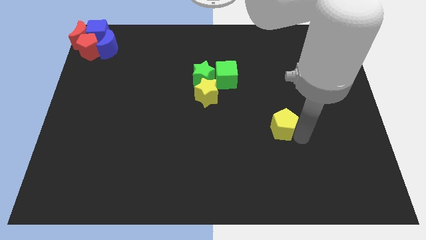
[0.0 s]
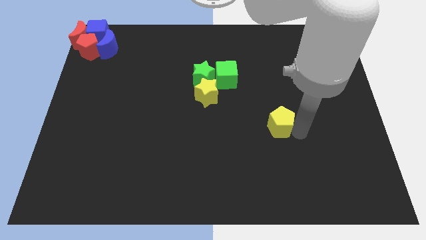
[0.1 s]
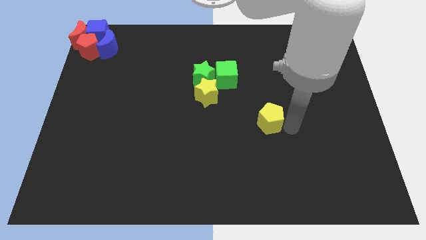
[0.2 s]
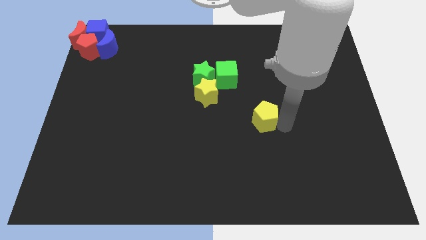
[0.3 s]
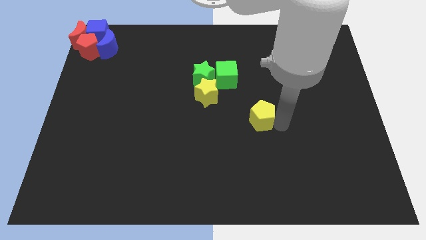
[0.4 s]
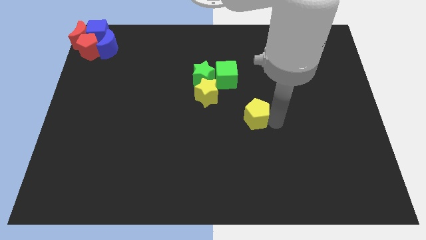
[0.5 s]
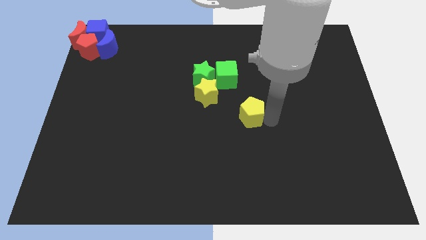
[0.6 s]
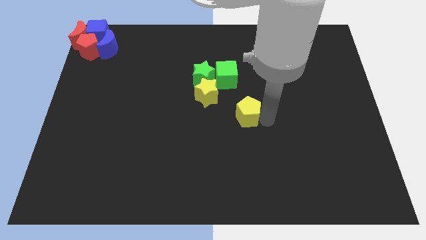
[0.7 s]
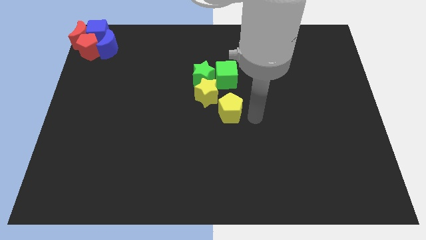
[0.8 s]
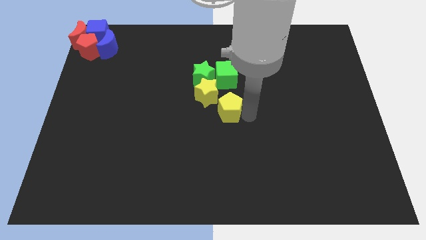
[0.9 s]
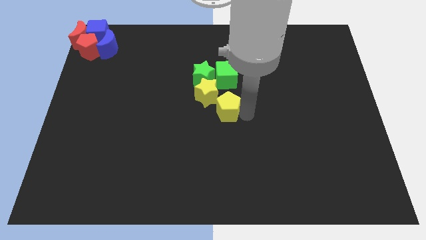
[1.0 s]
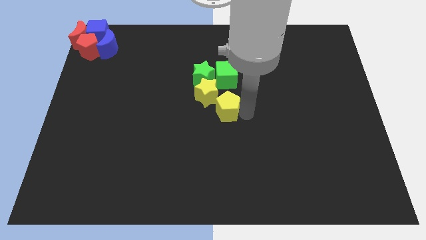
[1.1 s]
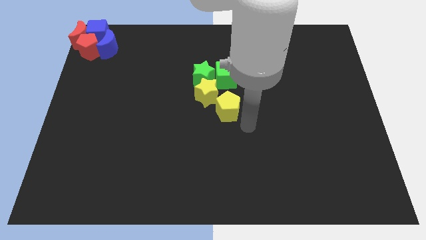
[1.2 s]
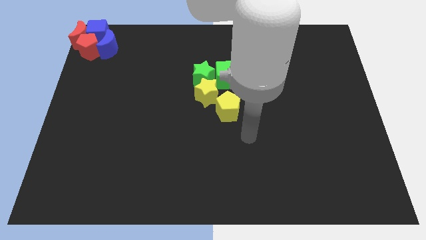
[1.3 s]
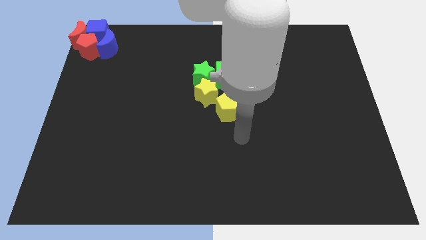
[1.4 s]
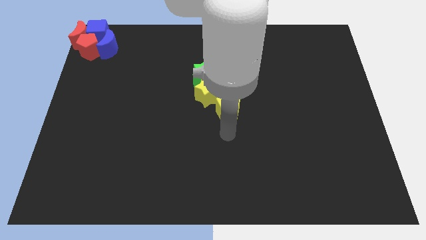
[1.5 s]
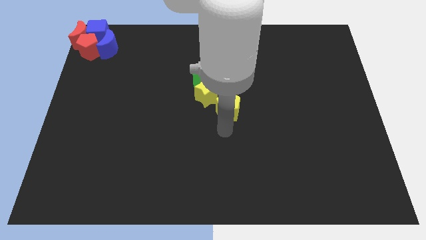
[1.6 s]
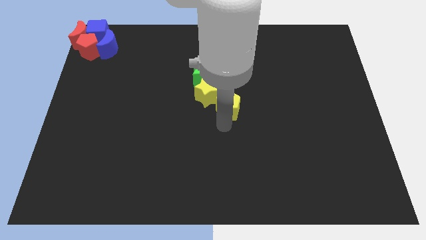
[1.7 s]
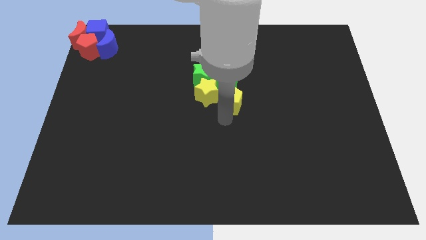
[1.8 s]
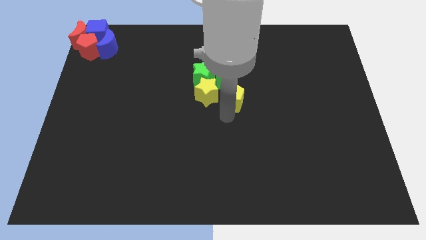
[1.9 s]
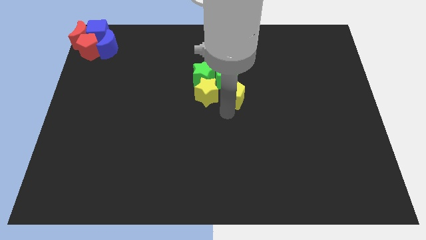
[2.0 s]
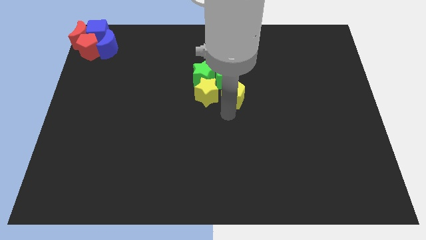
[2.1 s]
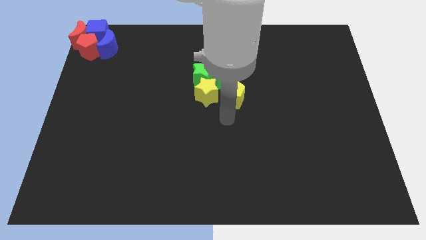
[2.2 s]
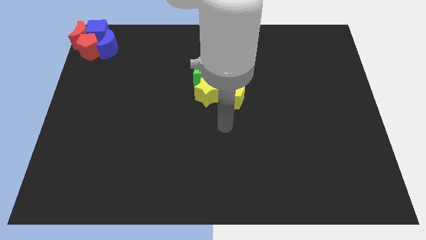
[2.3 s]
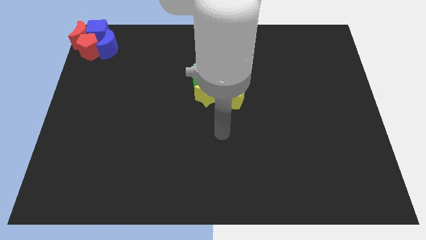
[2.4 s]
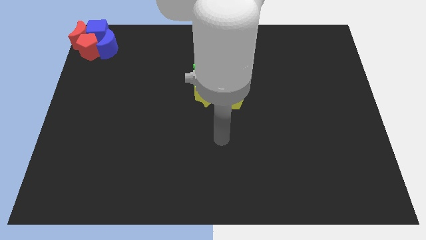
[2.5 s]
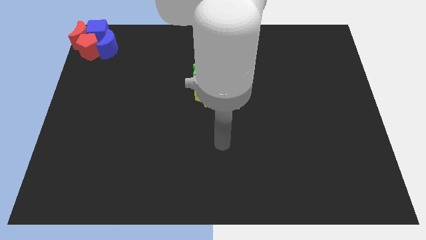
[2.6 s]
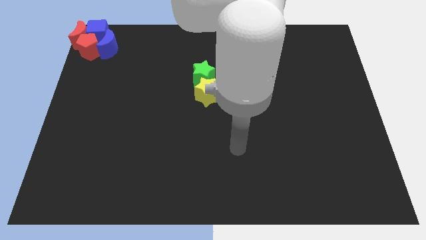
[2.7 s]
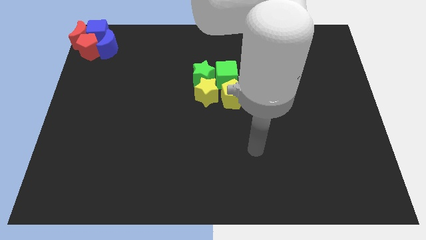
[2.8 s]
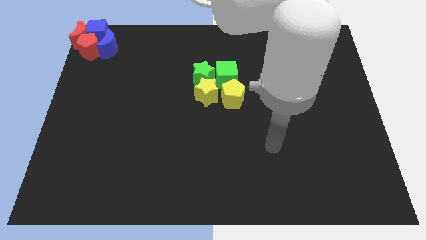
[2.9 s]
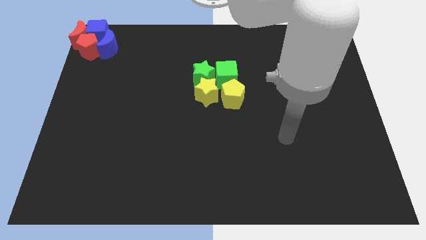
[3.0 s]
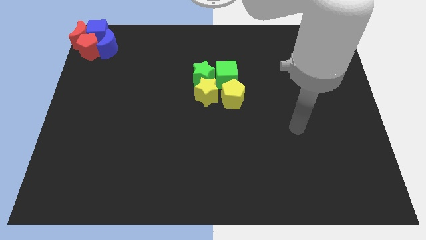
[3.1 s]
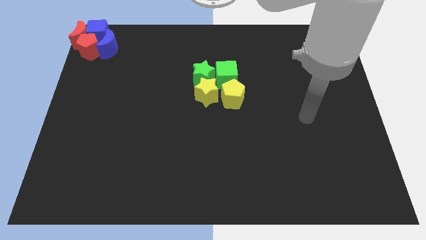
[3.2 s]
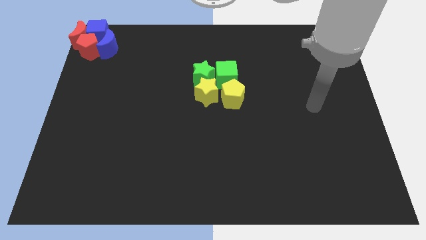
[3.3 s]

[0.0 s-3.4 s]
push the yellow pentagon to the right of the yellow star

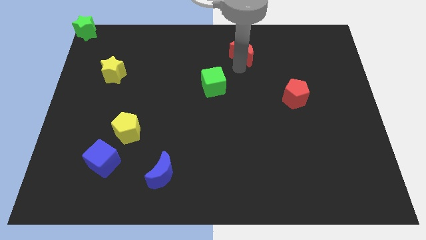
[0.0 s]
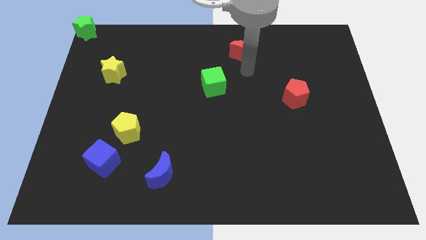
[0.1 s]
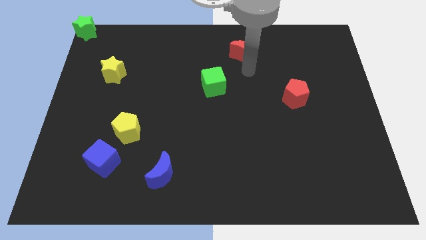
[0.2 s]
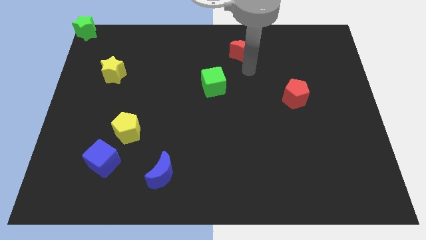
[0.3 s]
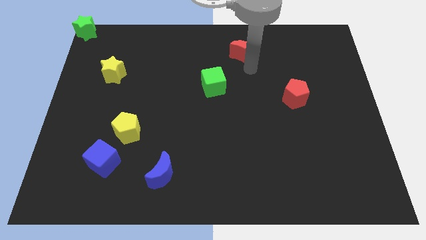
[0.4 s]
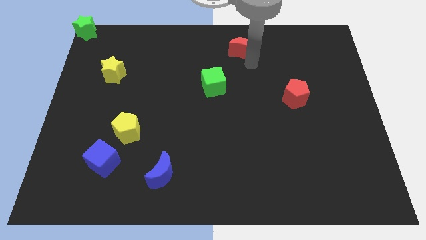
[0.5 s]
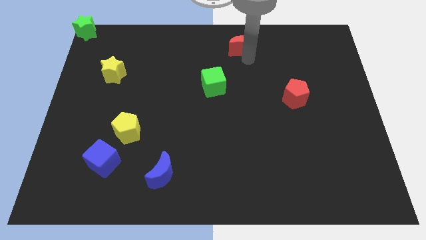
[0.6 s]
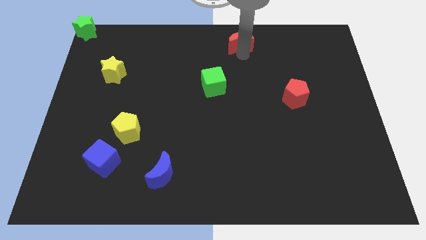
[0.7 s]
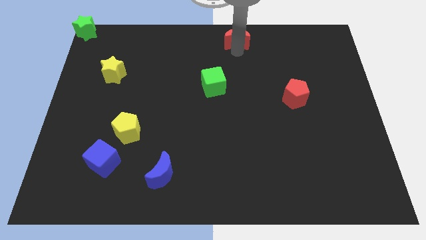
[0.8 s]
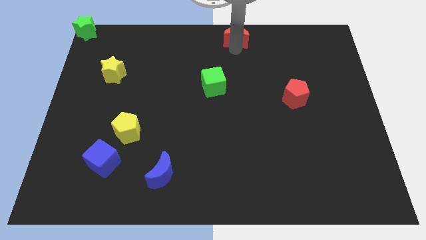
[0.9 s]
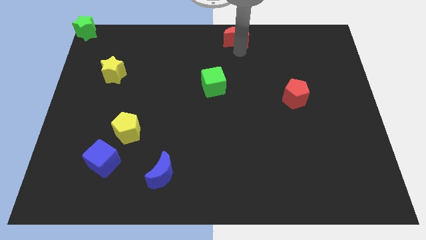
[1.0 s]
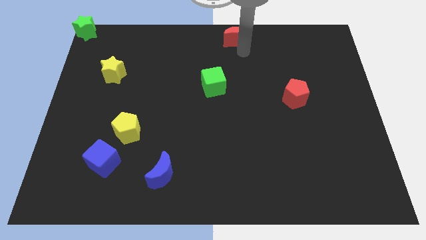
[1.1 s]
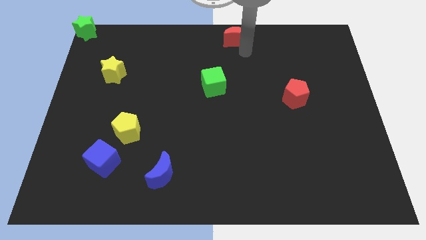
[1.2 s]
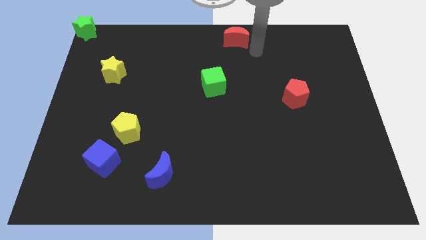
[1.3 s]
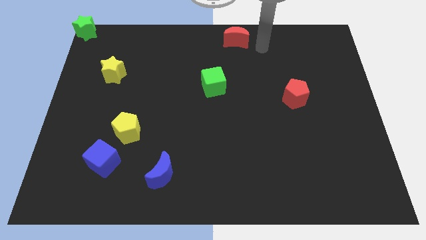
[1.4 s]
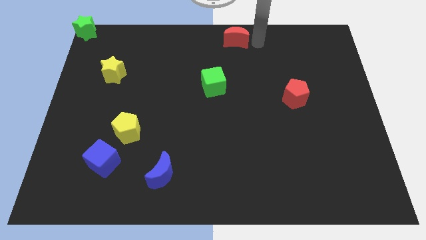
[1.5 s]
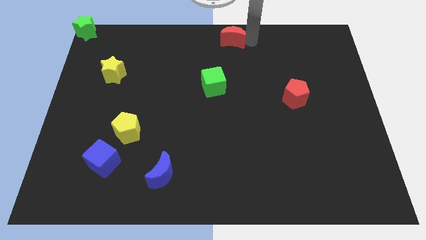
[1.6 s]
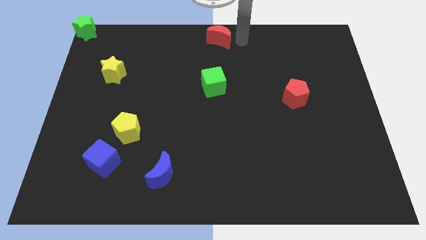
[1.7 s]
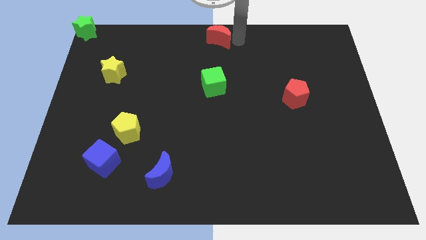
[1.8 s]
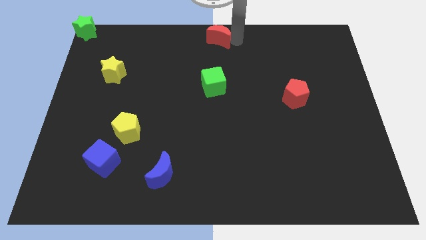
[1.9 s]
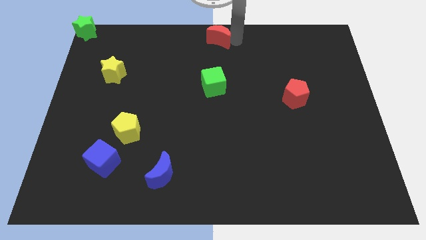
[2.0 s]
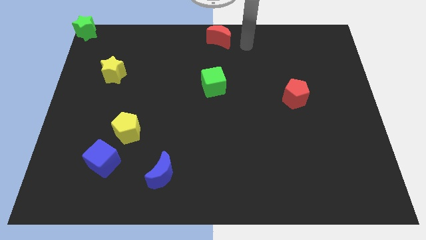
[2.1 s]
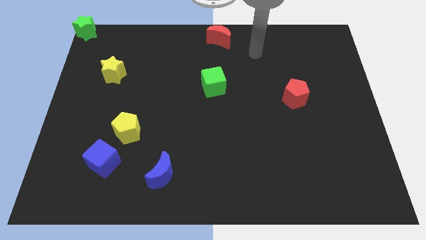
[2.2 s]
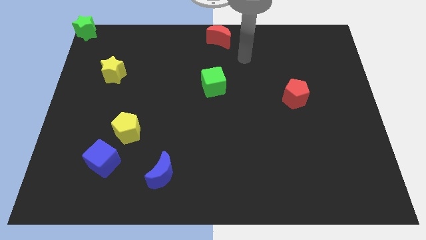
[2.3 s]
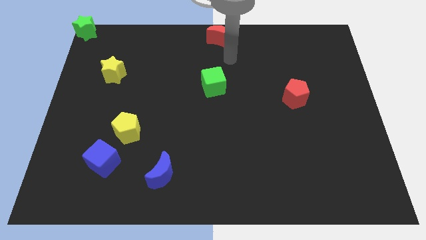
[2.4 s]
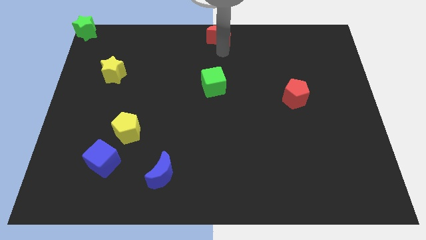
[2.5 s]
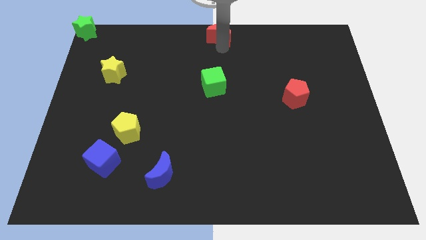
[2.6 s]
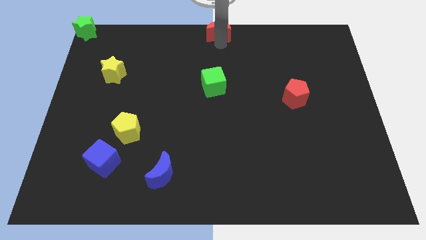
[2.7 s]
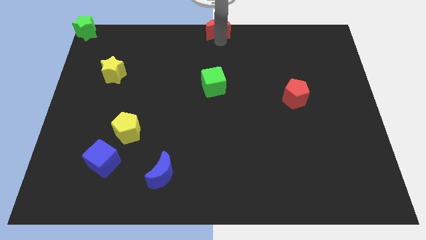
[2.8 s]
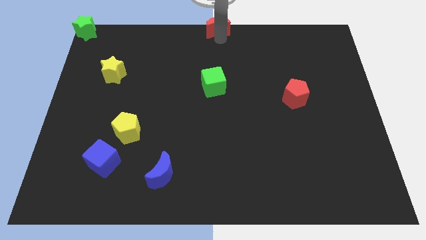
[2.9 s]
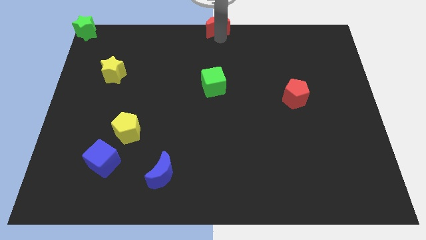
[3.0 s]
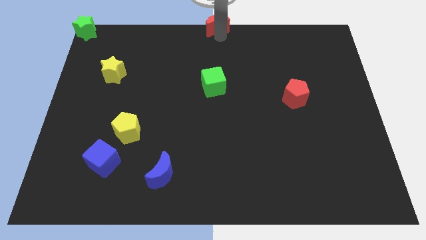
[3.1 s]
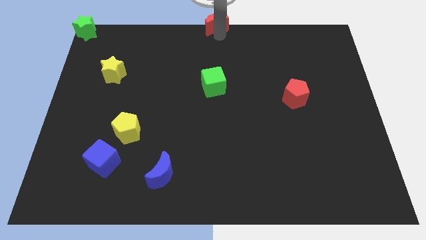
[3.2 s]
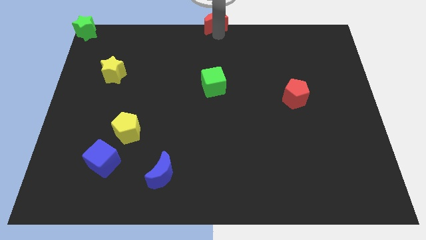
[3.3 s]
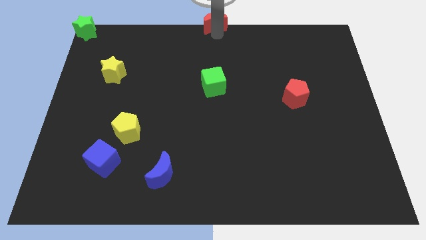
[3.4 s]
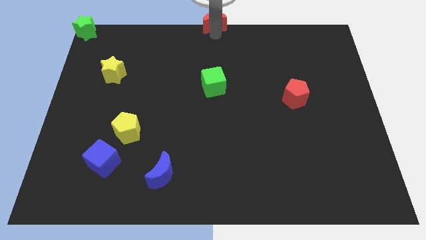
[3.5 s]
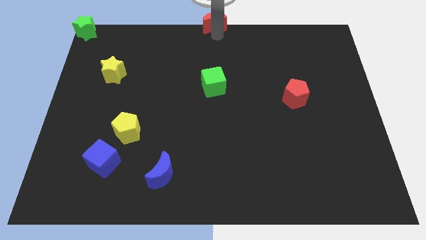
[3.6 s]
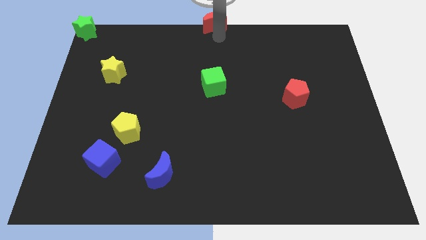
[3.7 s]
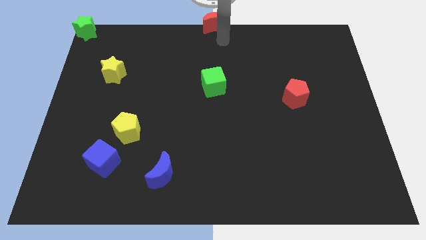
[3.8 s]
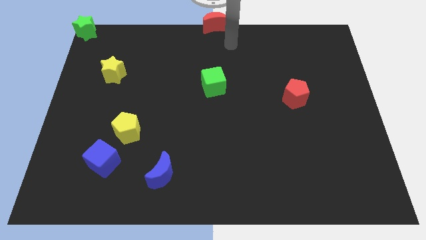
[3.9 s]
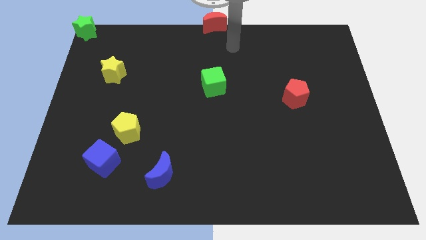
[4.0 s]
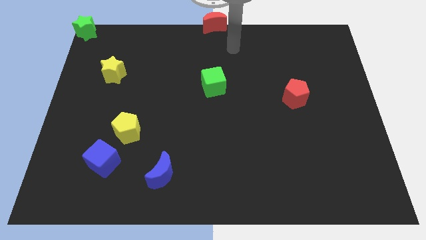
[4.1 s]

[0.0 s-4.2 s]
move red crescent to the center top corner of the board

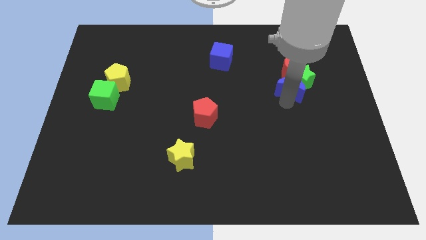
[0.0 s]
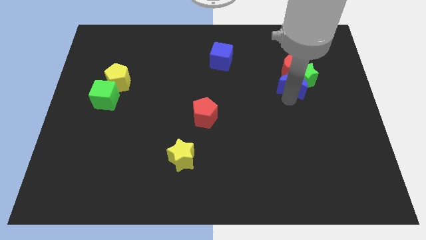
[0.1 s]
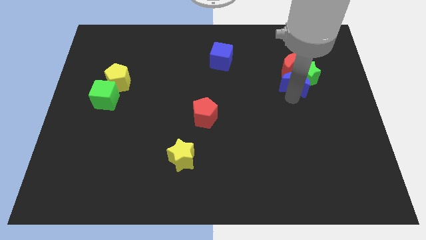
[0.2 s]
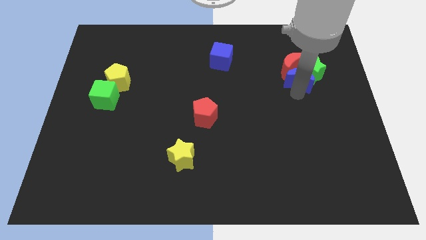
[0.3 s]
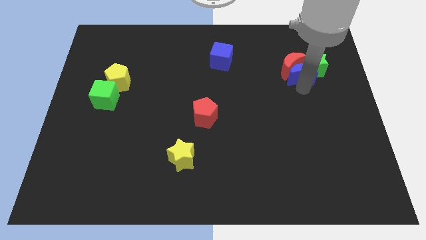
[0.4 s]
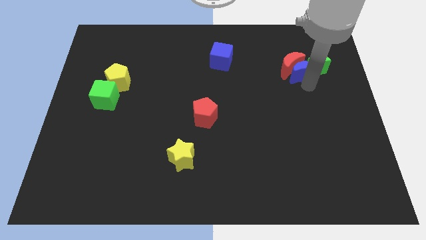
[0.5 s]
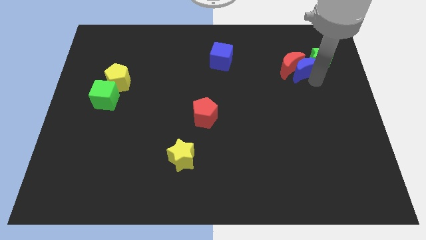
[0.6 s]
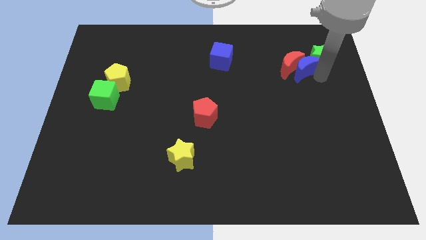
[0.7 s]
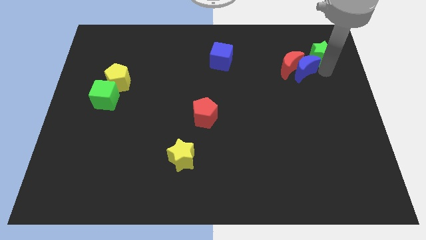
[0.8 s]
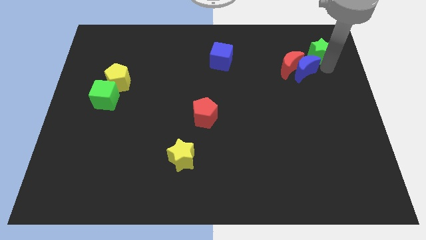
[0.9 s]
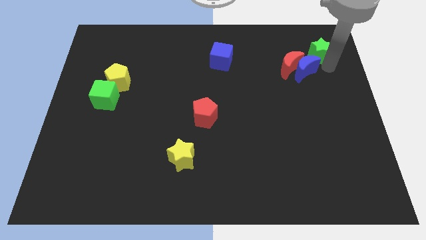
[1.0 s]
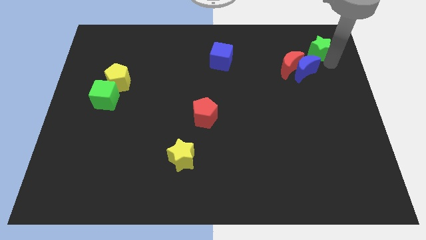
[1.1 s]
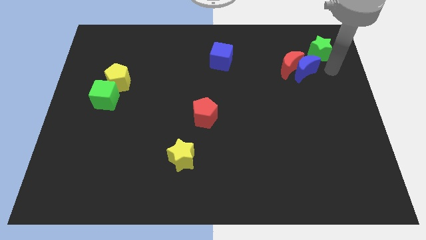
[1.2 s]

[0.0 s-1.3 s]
push the green star along with the blue crescent towards the top right corner

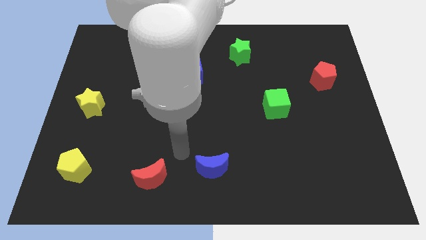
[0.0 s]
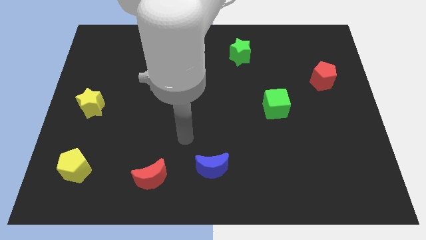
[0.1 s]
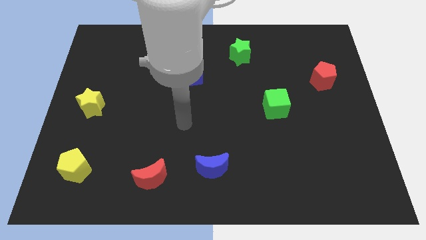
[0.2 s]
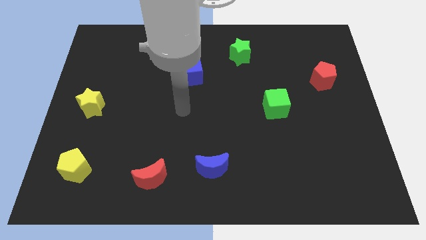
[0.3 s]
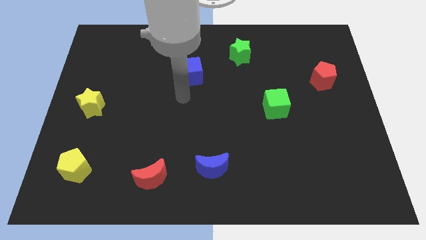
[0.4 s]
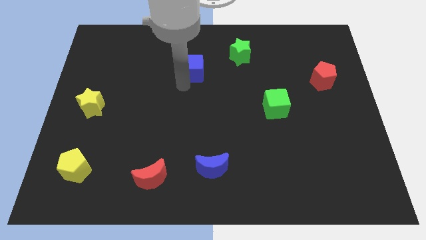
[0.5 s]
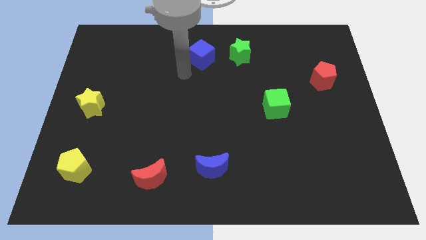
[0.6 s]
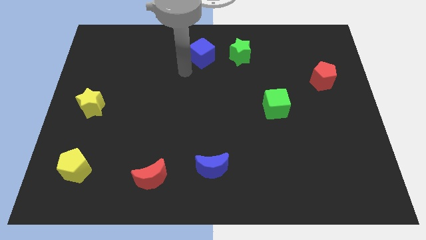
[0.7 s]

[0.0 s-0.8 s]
push the blue cube towards the left of the green star
